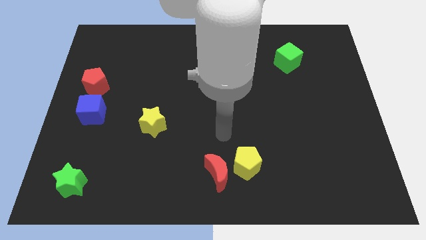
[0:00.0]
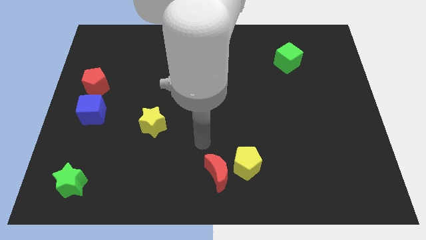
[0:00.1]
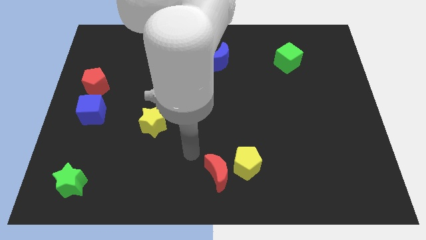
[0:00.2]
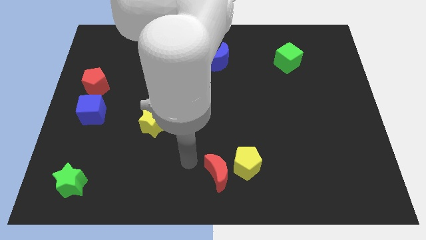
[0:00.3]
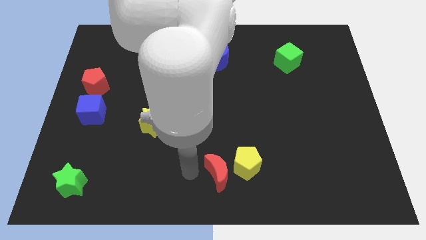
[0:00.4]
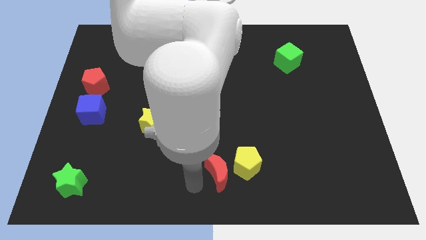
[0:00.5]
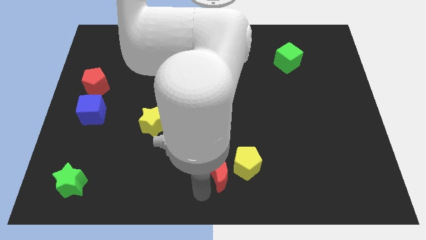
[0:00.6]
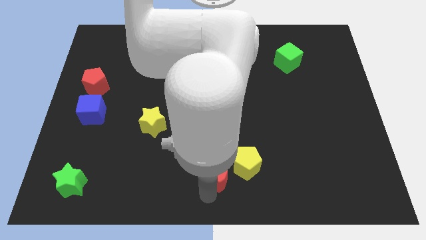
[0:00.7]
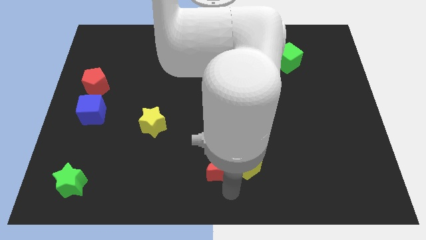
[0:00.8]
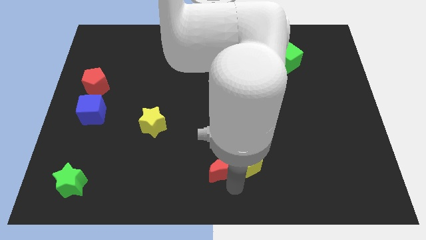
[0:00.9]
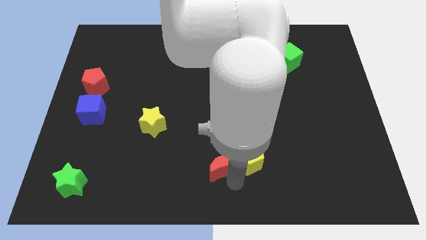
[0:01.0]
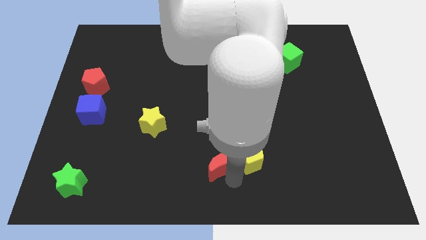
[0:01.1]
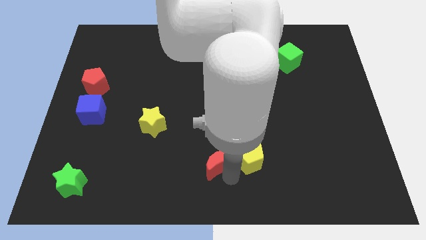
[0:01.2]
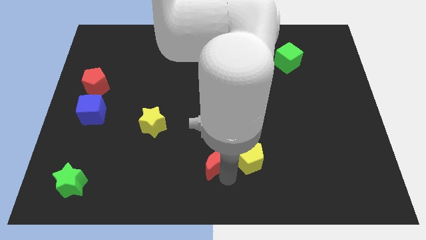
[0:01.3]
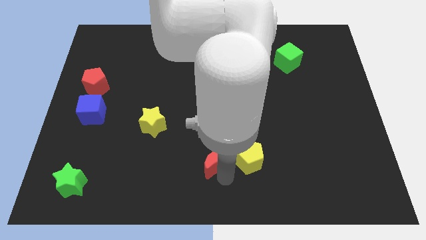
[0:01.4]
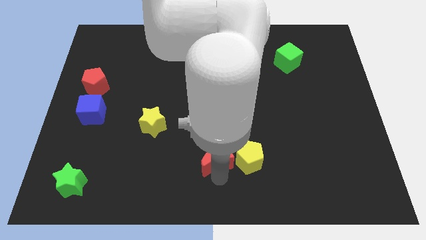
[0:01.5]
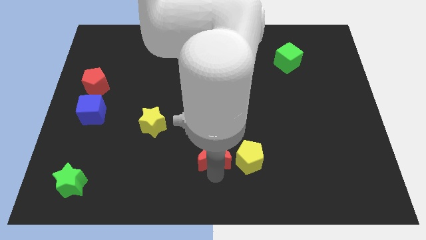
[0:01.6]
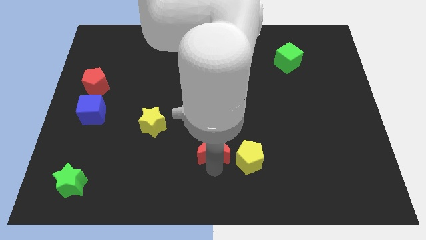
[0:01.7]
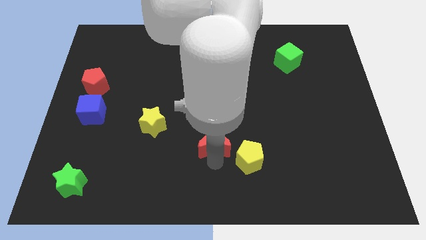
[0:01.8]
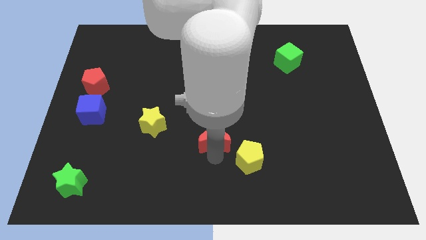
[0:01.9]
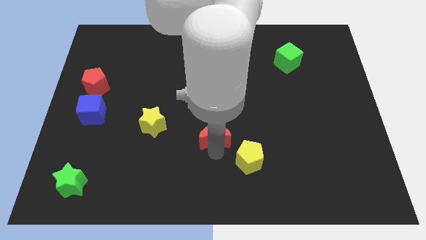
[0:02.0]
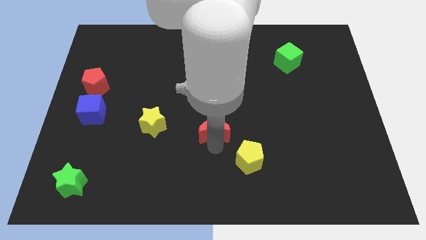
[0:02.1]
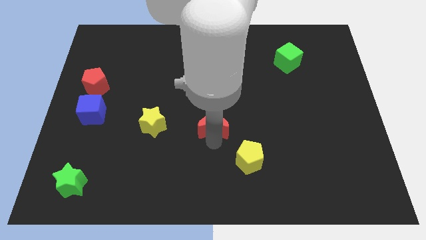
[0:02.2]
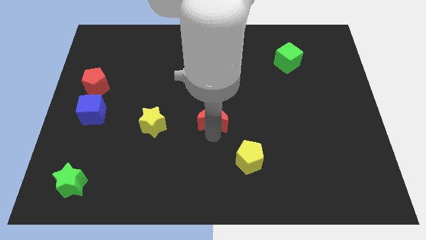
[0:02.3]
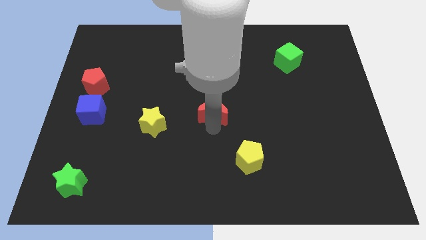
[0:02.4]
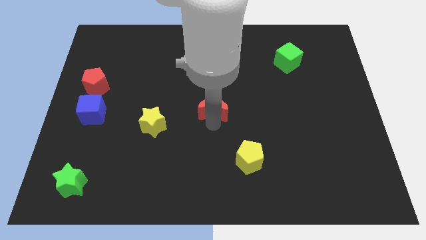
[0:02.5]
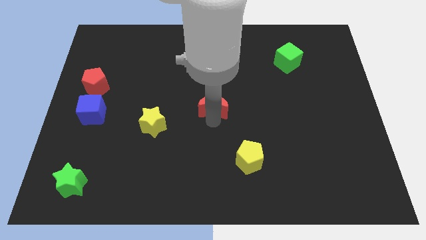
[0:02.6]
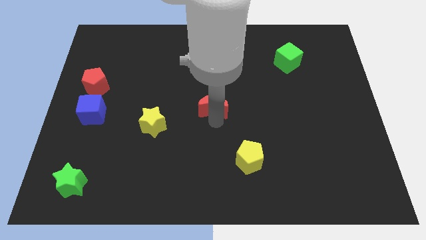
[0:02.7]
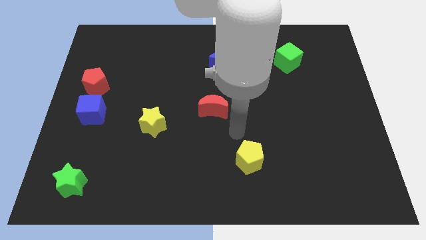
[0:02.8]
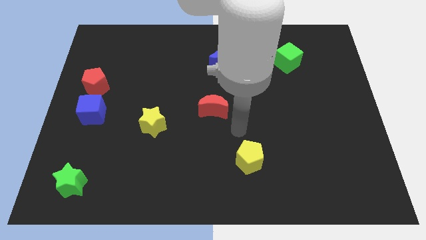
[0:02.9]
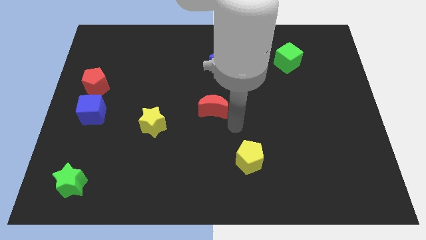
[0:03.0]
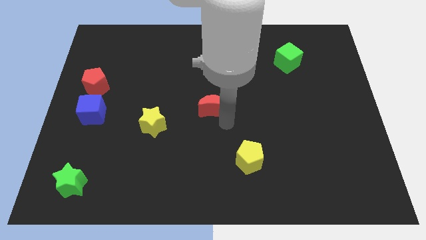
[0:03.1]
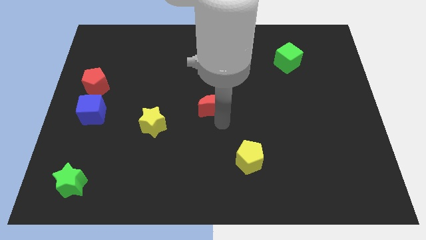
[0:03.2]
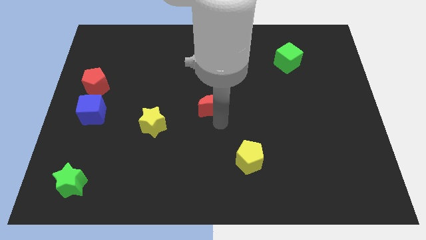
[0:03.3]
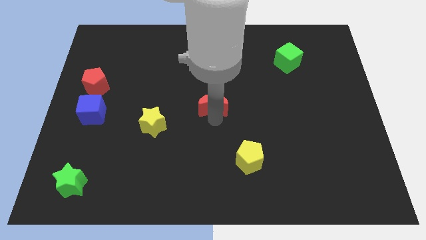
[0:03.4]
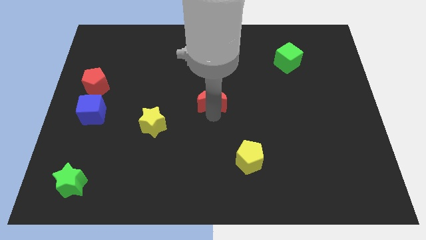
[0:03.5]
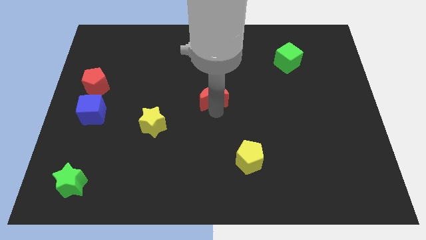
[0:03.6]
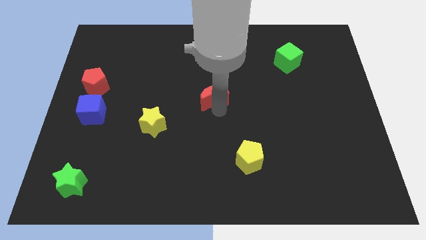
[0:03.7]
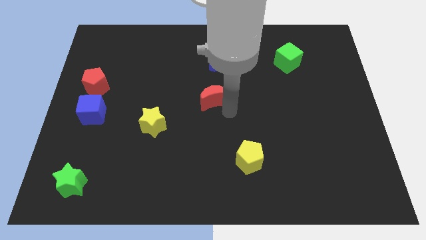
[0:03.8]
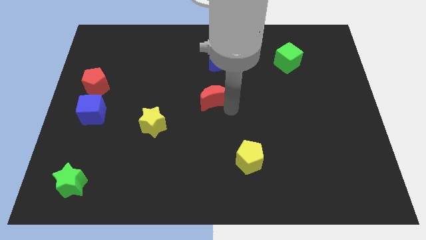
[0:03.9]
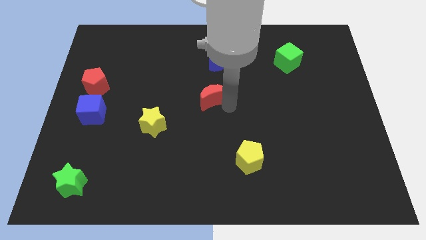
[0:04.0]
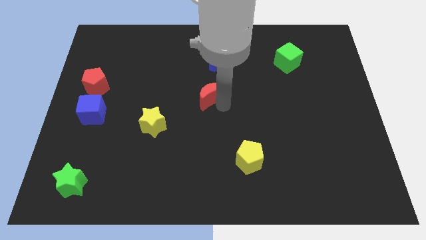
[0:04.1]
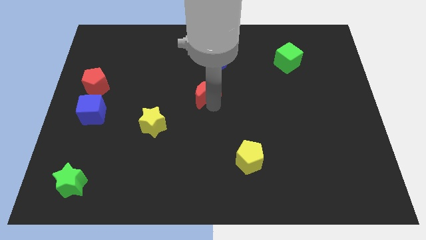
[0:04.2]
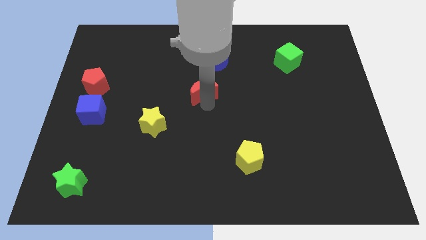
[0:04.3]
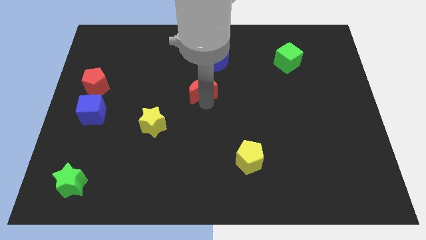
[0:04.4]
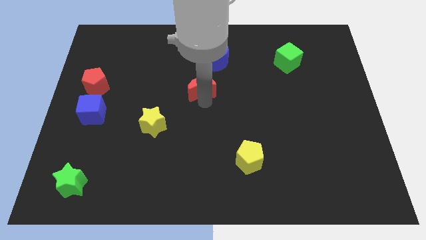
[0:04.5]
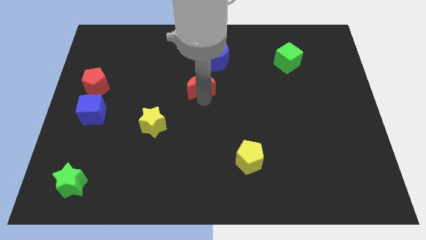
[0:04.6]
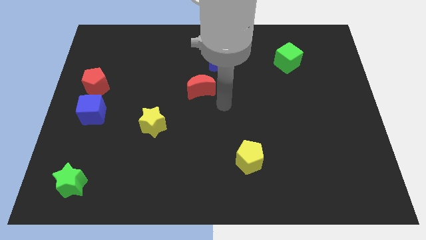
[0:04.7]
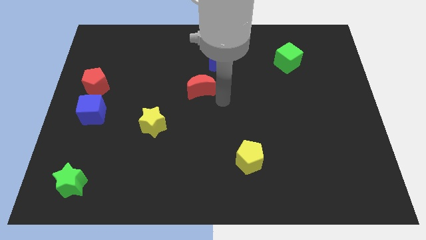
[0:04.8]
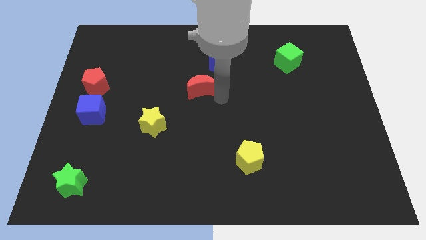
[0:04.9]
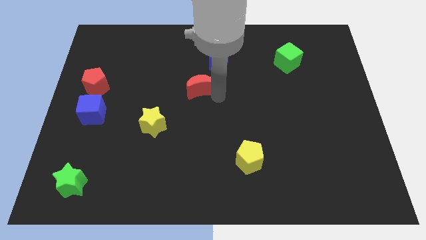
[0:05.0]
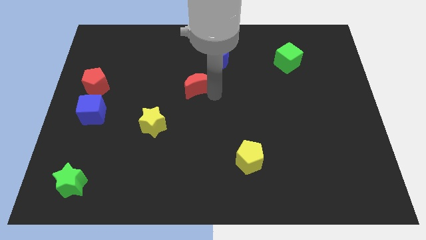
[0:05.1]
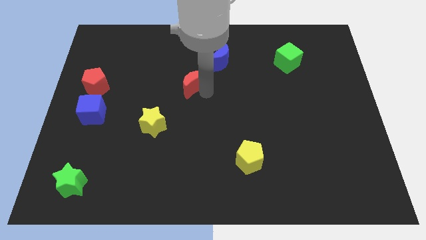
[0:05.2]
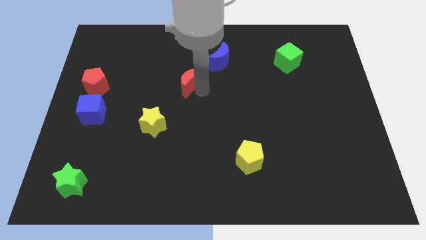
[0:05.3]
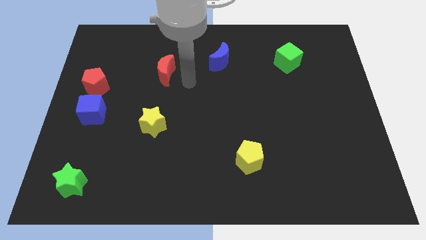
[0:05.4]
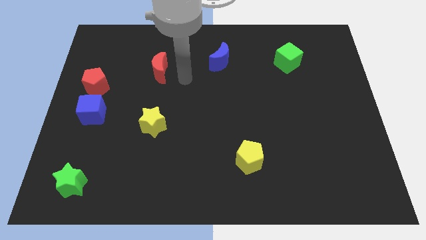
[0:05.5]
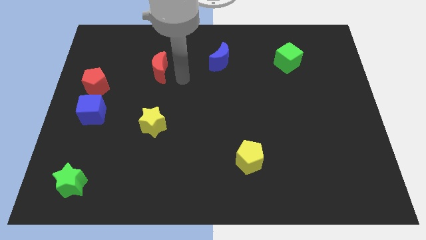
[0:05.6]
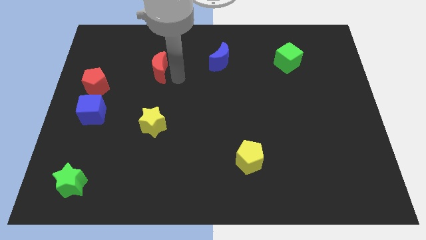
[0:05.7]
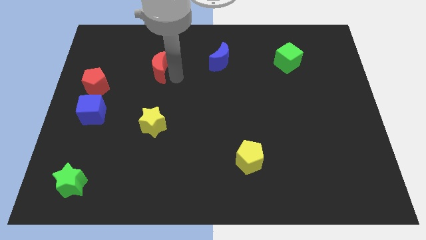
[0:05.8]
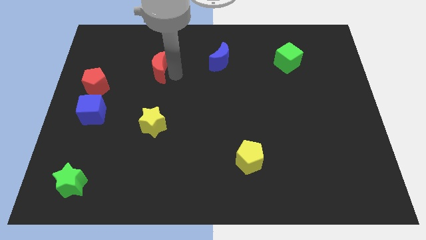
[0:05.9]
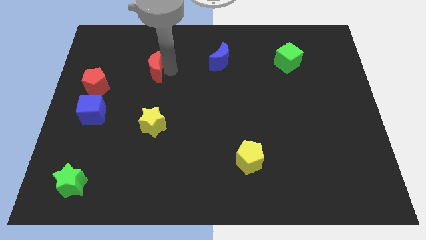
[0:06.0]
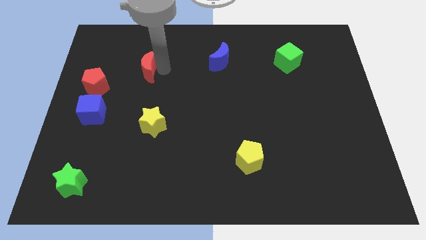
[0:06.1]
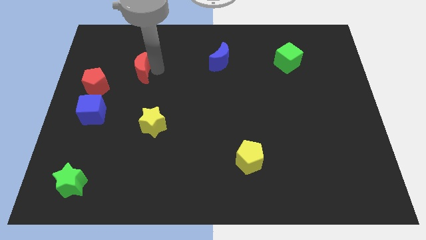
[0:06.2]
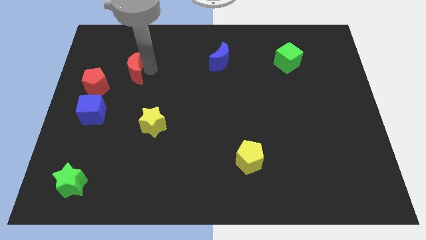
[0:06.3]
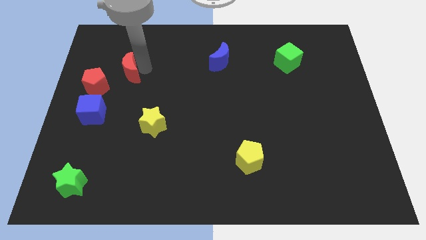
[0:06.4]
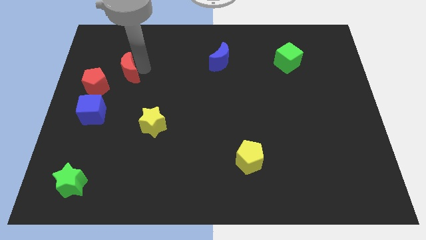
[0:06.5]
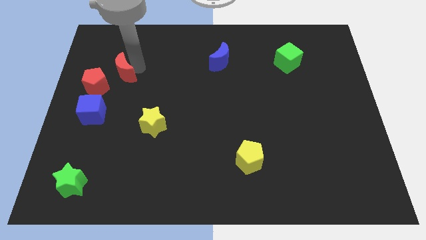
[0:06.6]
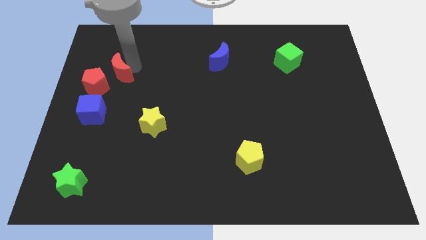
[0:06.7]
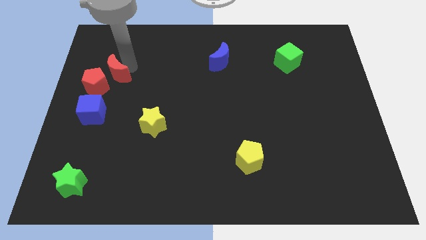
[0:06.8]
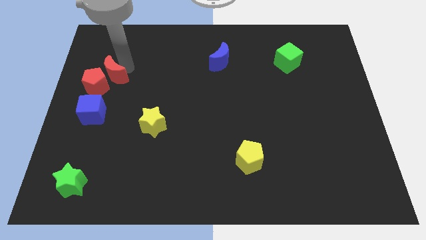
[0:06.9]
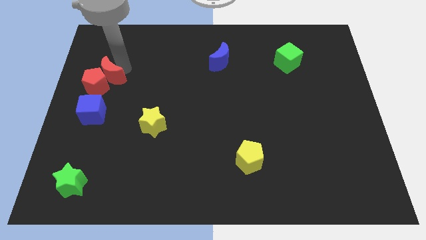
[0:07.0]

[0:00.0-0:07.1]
push the red moon next to the red pentagon

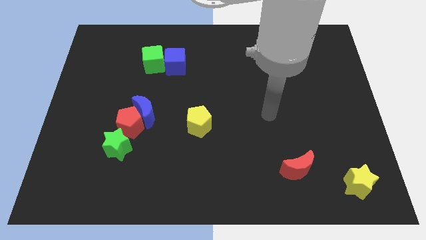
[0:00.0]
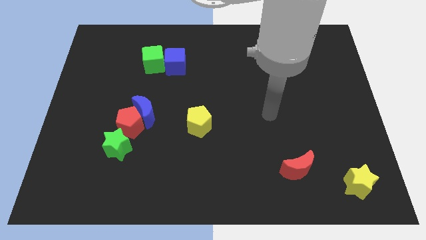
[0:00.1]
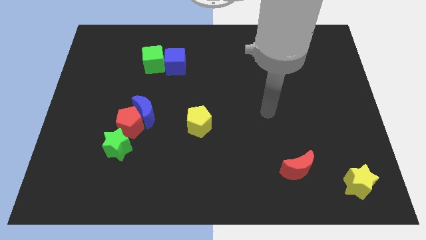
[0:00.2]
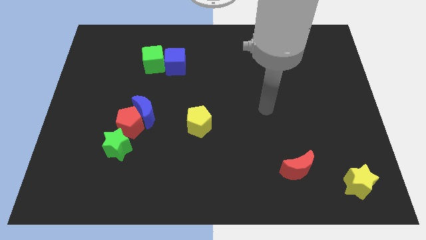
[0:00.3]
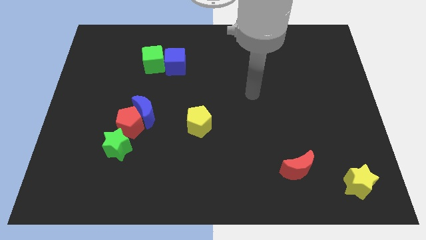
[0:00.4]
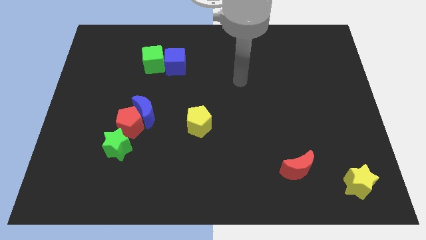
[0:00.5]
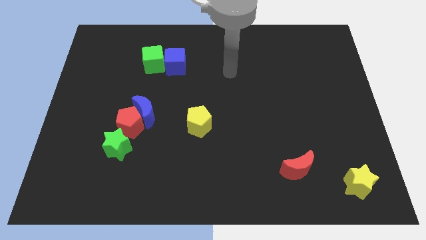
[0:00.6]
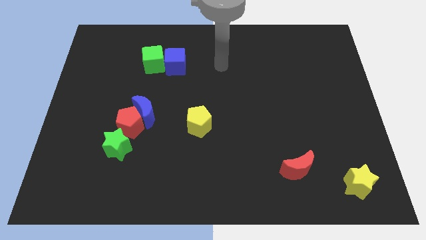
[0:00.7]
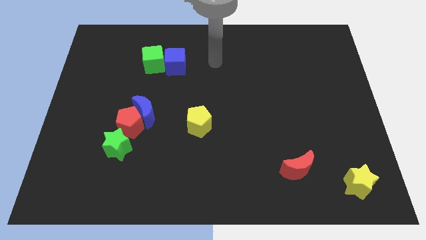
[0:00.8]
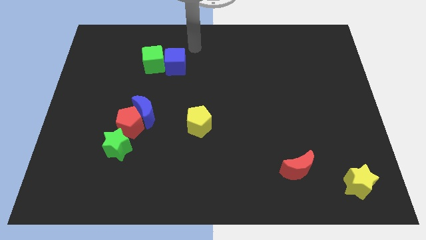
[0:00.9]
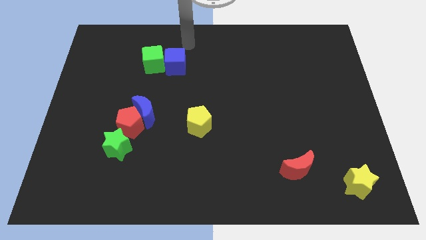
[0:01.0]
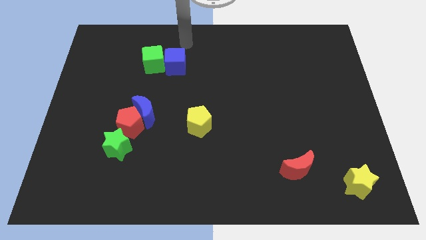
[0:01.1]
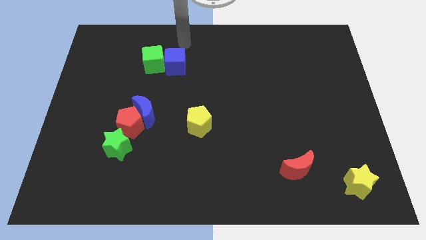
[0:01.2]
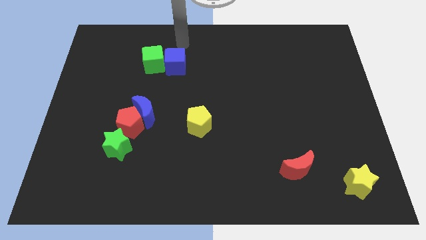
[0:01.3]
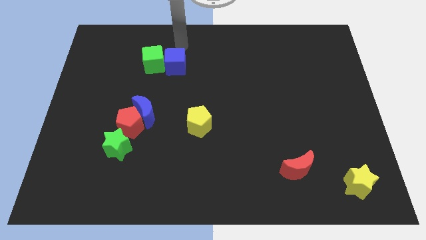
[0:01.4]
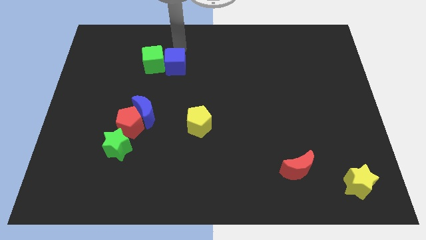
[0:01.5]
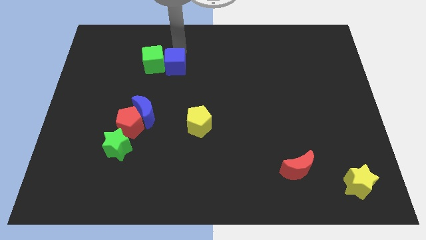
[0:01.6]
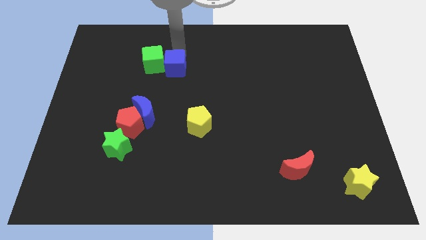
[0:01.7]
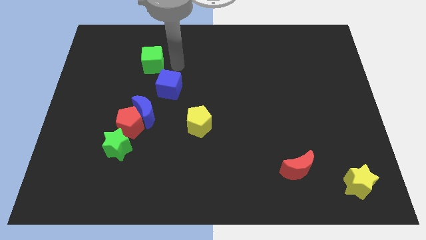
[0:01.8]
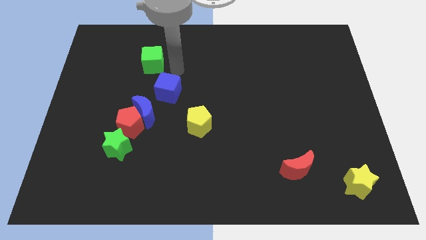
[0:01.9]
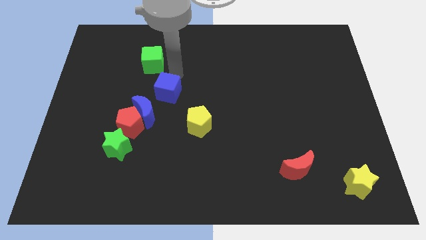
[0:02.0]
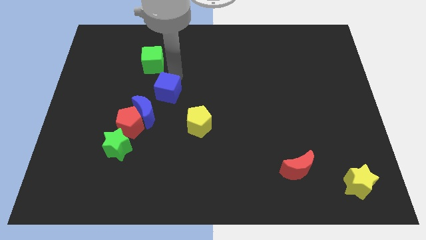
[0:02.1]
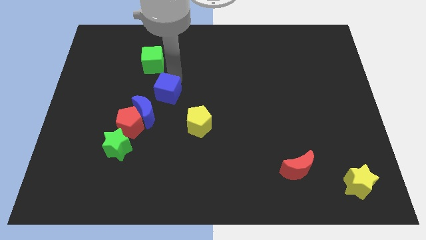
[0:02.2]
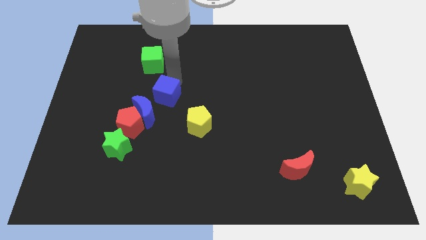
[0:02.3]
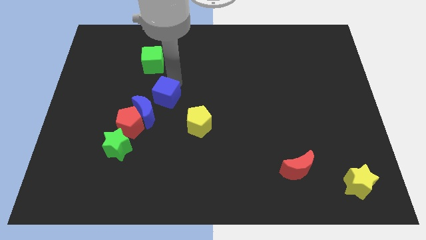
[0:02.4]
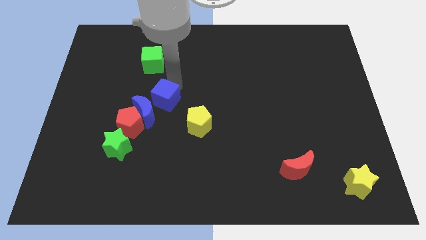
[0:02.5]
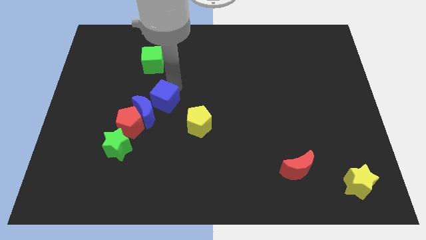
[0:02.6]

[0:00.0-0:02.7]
move the blue cube next to the blue moon
